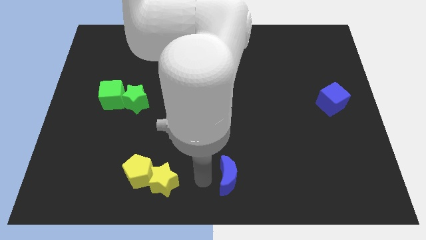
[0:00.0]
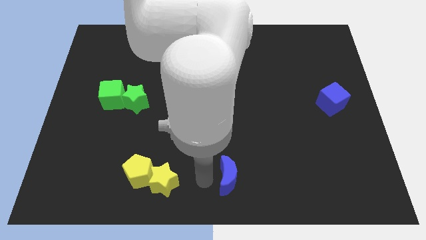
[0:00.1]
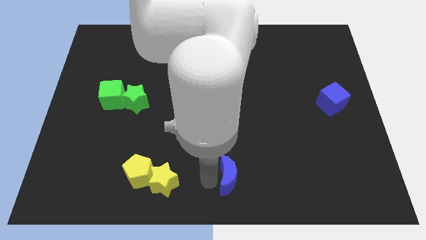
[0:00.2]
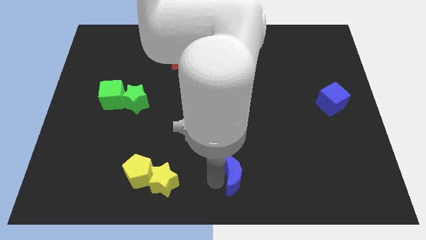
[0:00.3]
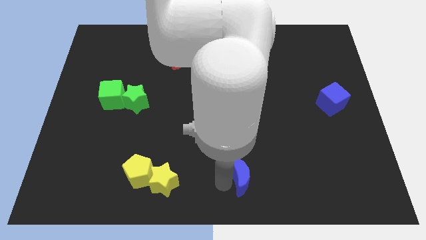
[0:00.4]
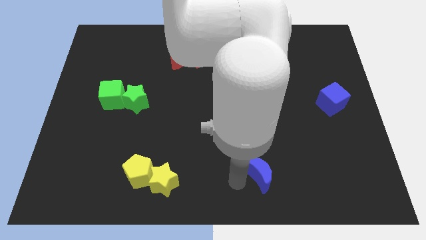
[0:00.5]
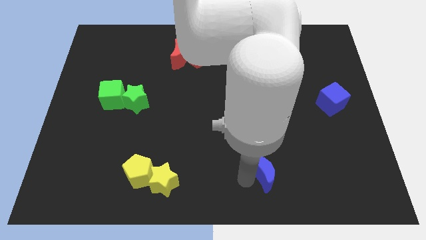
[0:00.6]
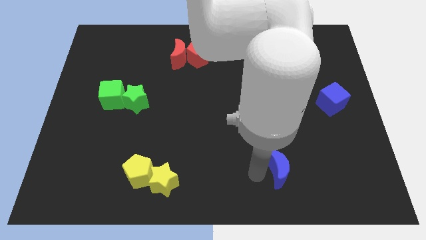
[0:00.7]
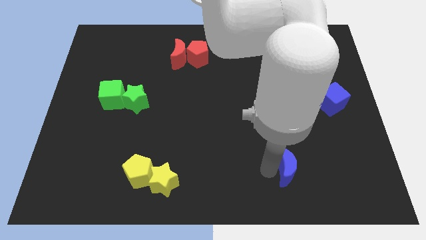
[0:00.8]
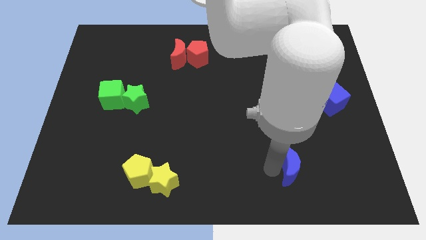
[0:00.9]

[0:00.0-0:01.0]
move the blue crescent to the right of the board

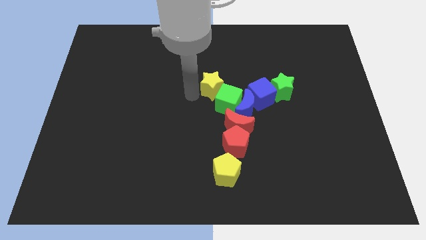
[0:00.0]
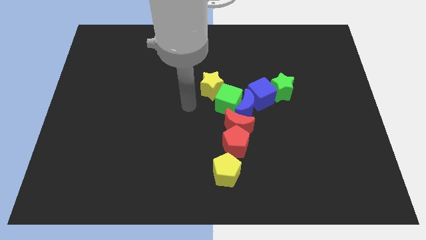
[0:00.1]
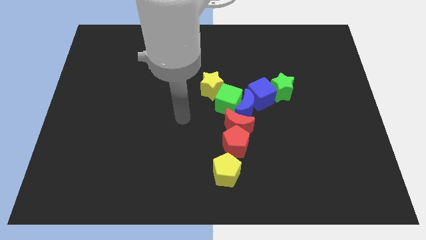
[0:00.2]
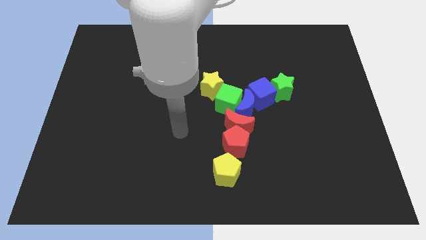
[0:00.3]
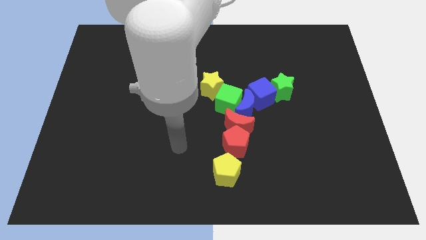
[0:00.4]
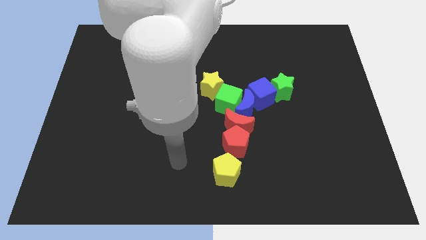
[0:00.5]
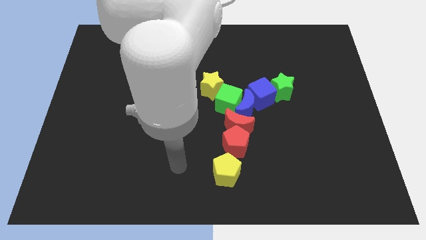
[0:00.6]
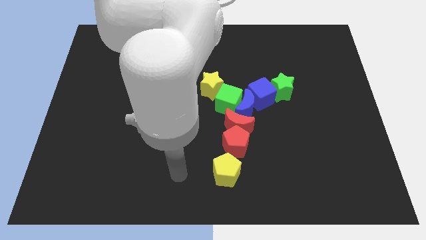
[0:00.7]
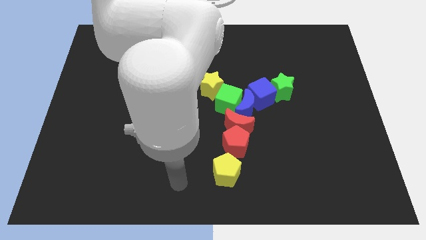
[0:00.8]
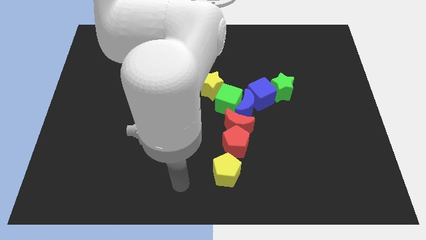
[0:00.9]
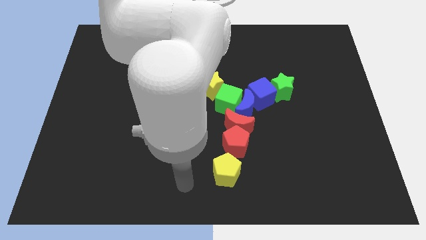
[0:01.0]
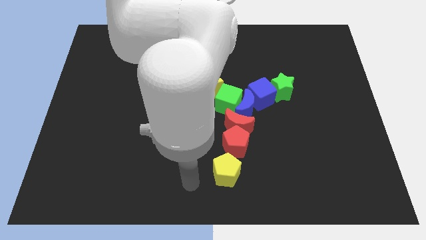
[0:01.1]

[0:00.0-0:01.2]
move the arm away from the yellow star

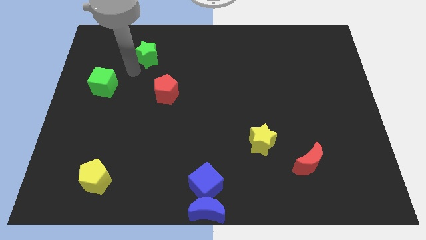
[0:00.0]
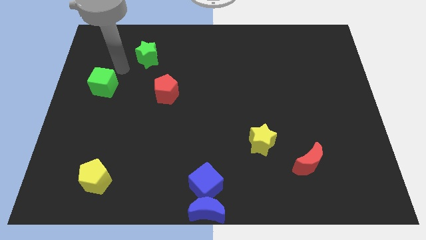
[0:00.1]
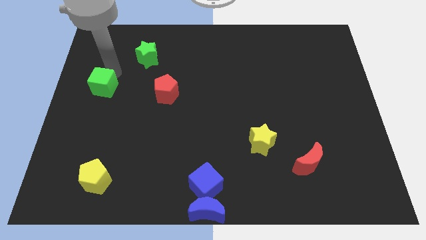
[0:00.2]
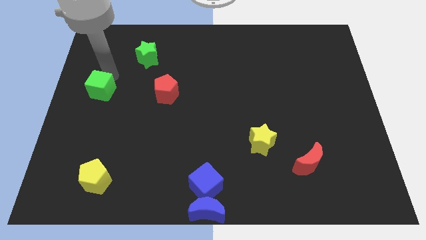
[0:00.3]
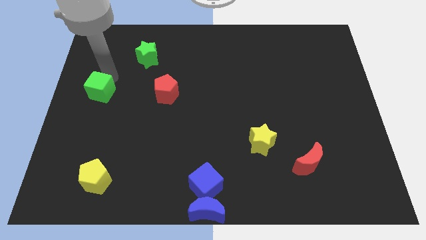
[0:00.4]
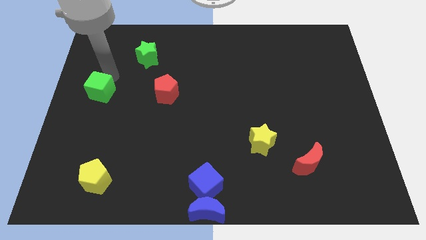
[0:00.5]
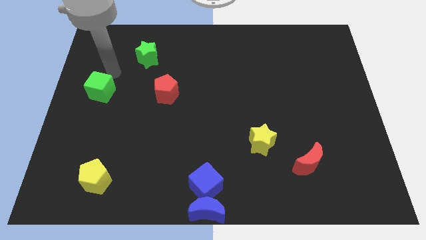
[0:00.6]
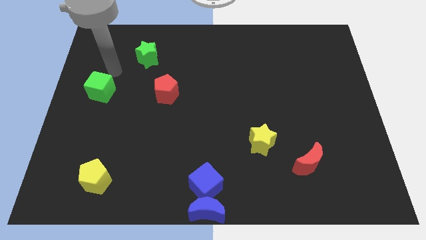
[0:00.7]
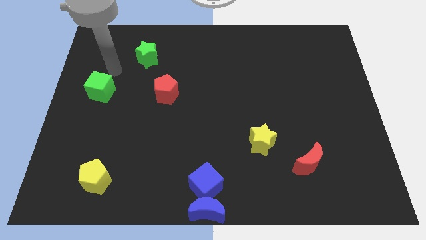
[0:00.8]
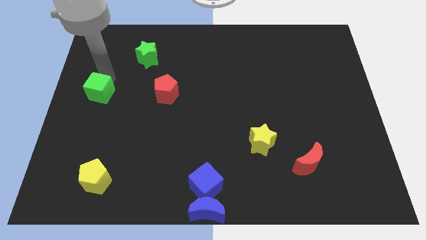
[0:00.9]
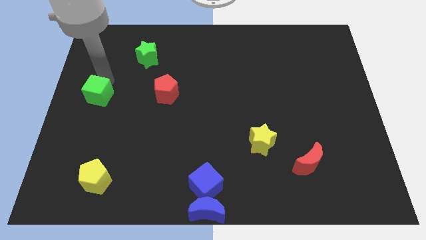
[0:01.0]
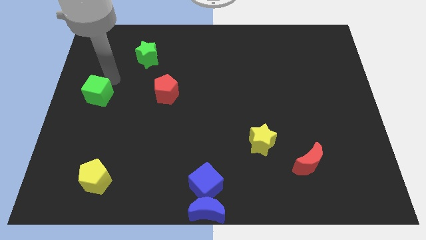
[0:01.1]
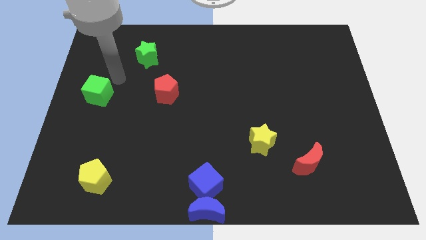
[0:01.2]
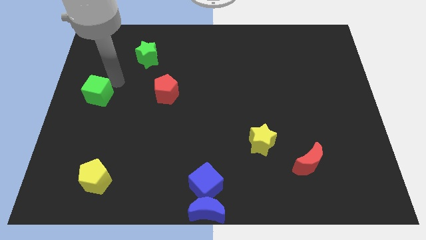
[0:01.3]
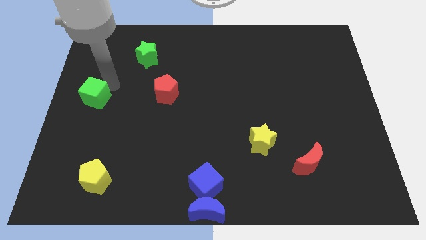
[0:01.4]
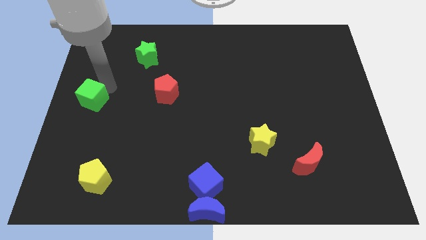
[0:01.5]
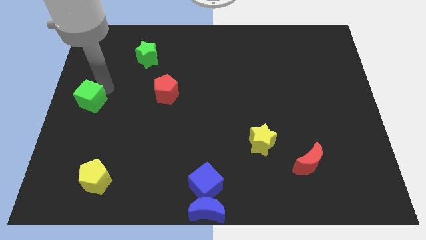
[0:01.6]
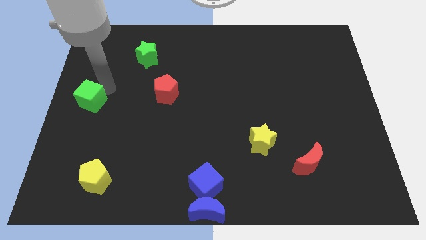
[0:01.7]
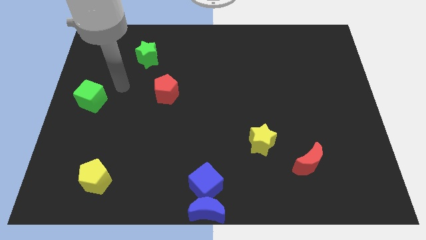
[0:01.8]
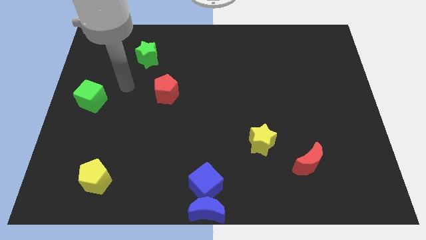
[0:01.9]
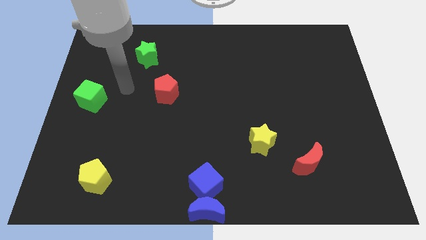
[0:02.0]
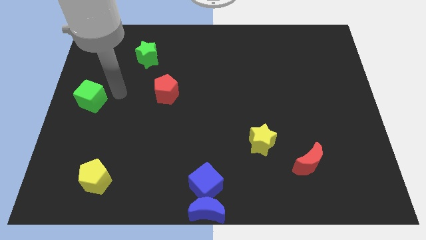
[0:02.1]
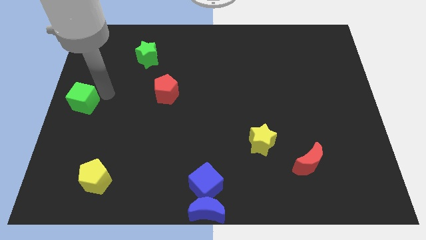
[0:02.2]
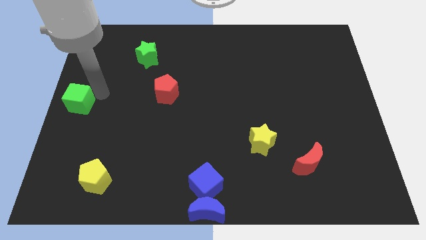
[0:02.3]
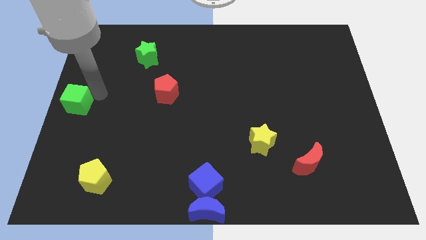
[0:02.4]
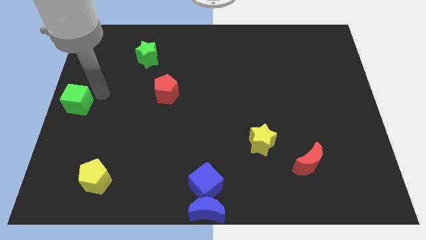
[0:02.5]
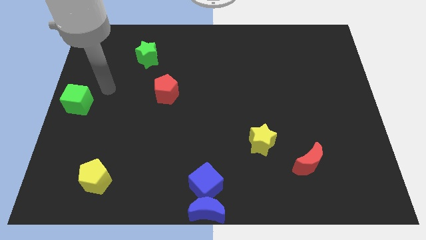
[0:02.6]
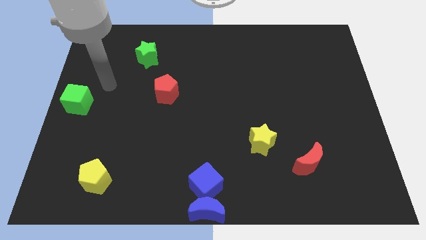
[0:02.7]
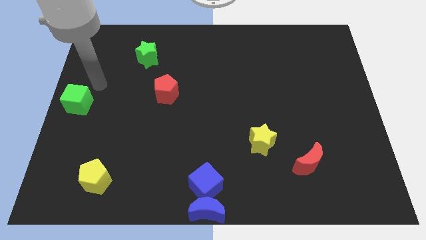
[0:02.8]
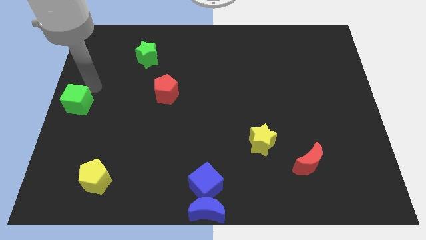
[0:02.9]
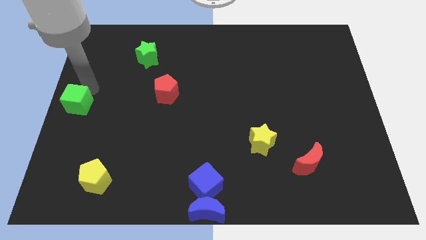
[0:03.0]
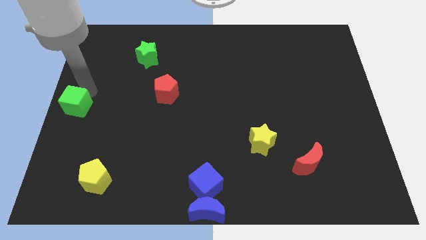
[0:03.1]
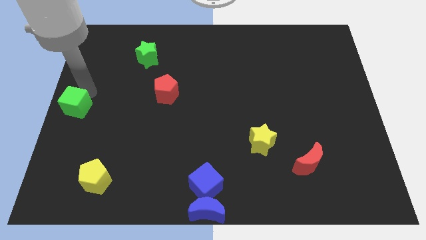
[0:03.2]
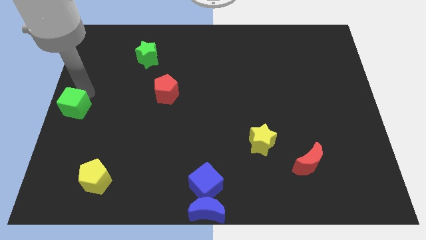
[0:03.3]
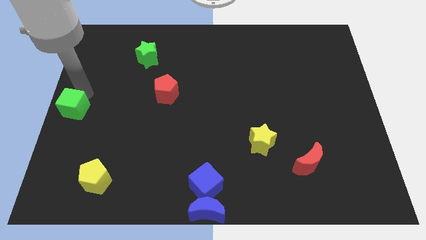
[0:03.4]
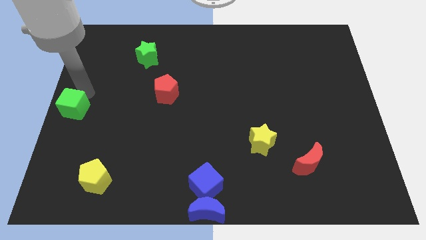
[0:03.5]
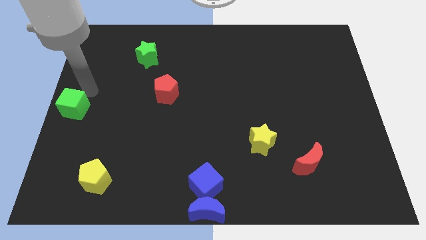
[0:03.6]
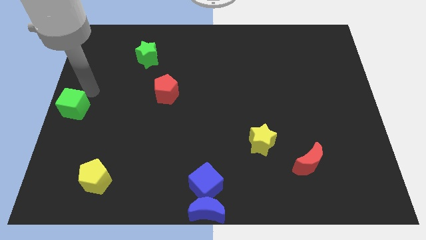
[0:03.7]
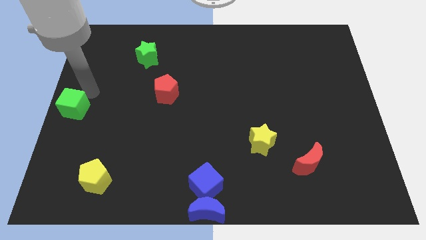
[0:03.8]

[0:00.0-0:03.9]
push the green cube to the center left of the board

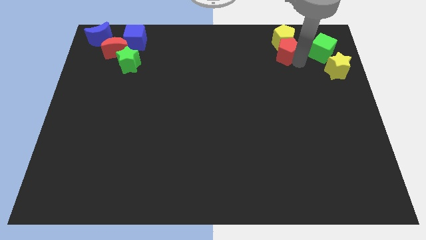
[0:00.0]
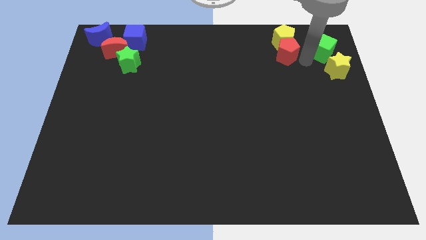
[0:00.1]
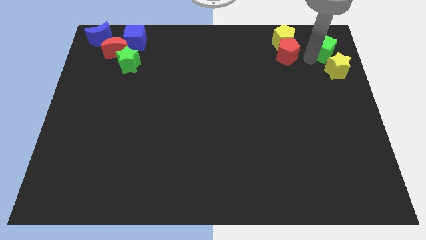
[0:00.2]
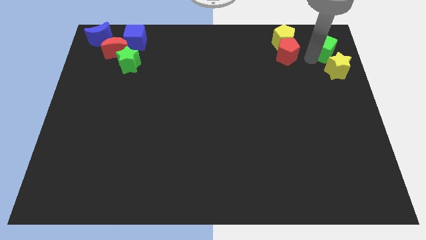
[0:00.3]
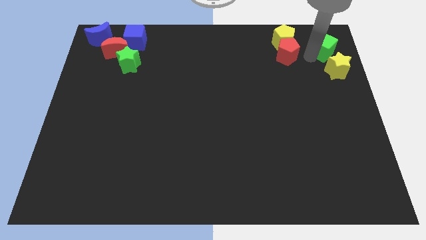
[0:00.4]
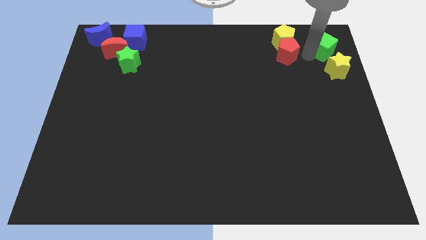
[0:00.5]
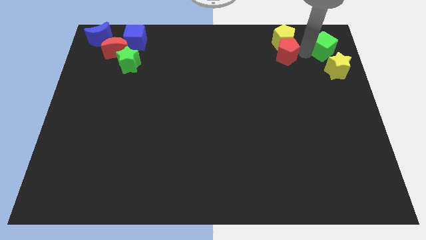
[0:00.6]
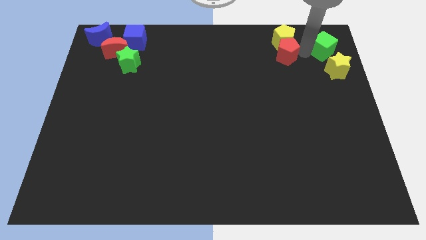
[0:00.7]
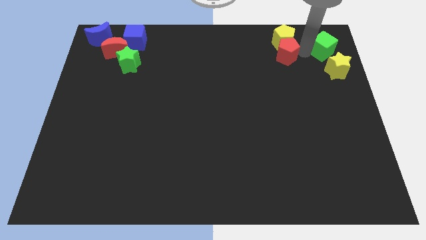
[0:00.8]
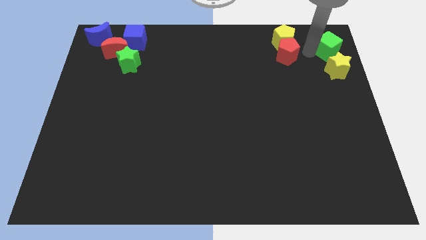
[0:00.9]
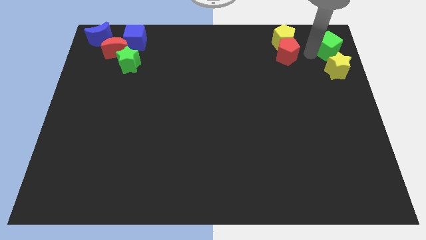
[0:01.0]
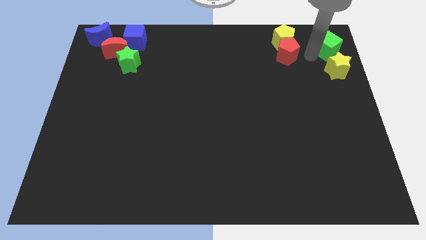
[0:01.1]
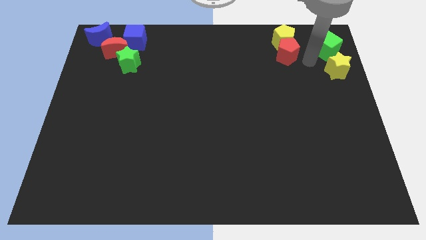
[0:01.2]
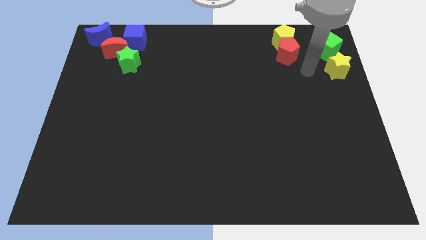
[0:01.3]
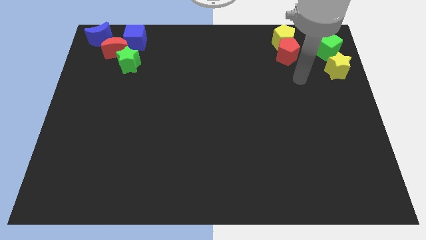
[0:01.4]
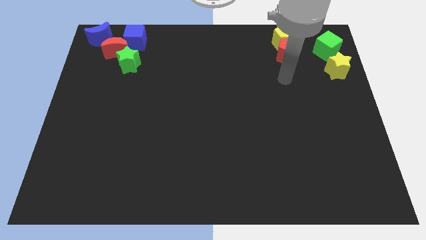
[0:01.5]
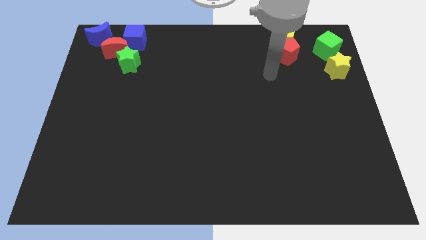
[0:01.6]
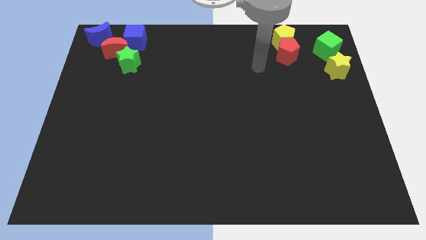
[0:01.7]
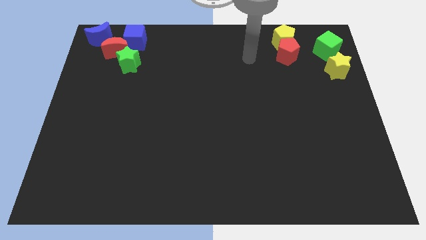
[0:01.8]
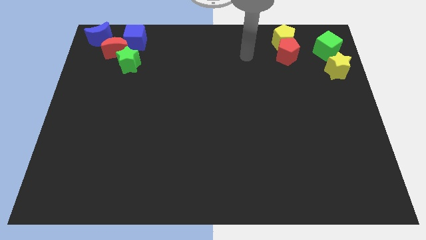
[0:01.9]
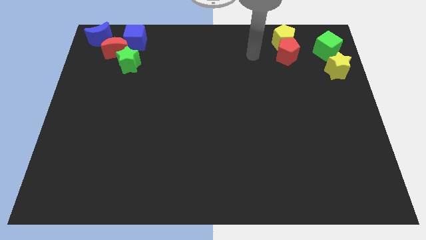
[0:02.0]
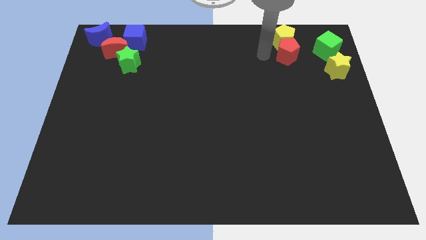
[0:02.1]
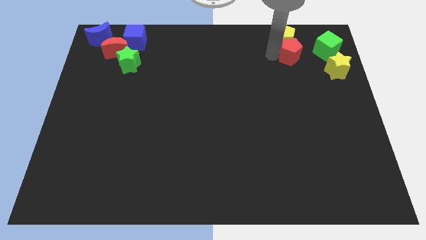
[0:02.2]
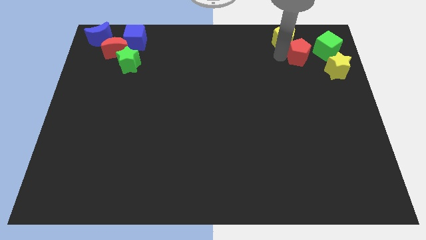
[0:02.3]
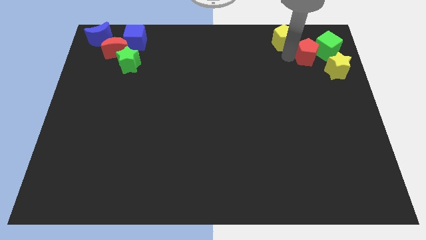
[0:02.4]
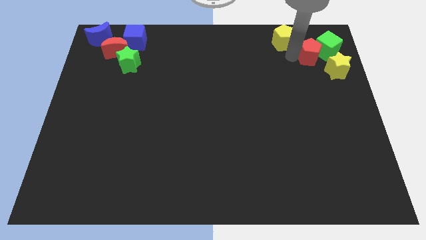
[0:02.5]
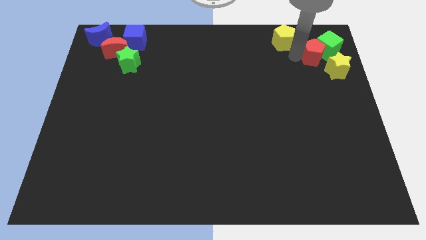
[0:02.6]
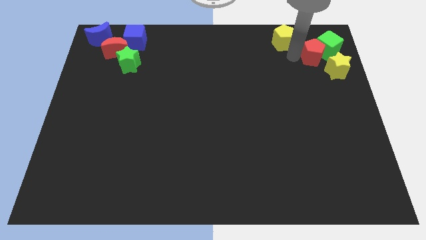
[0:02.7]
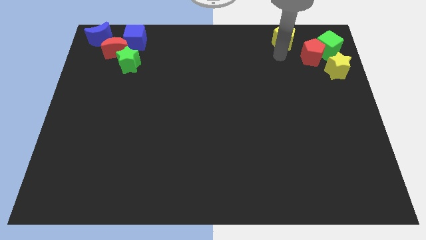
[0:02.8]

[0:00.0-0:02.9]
move the red pentagon left beside the green cube
